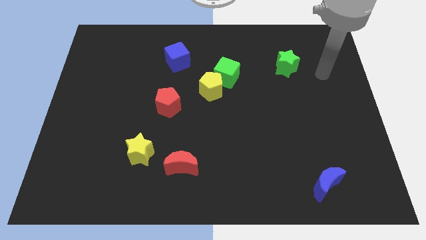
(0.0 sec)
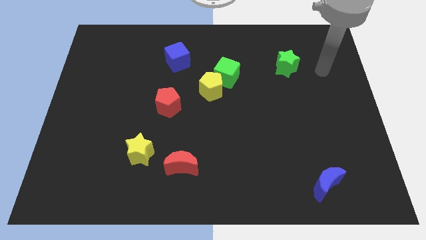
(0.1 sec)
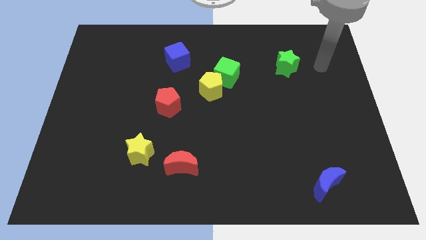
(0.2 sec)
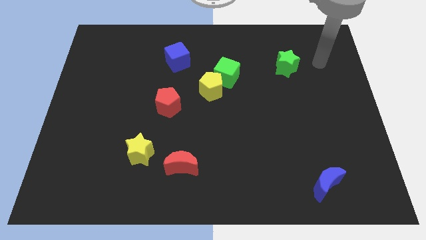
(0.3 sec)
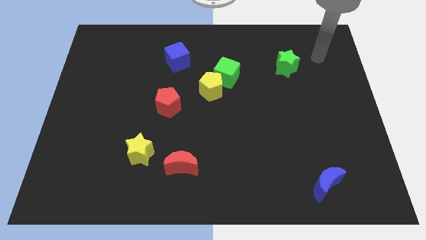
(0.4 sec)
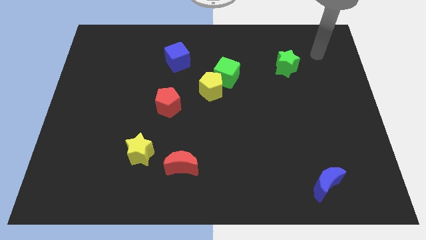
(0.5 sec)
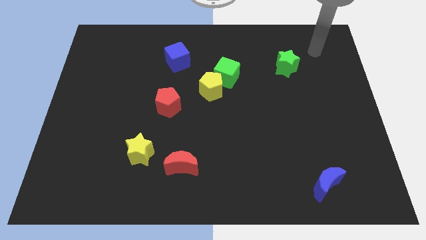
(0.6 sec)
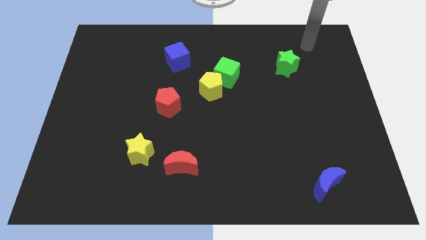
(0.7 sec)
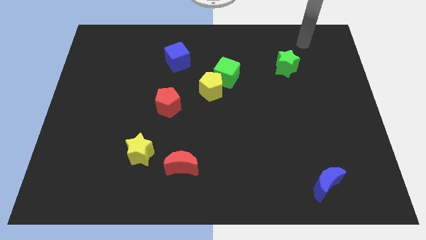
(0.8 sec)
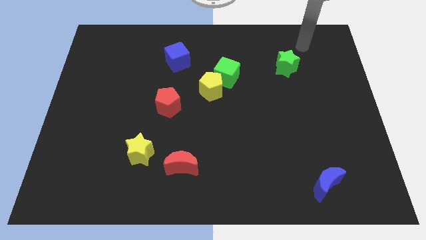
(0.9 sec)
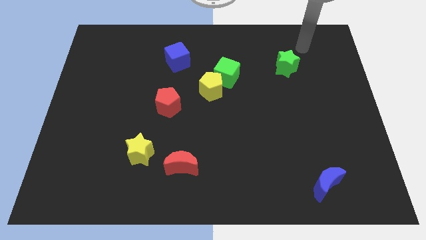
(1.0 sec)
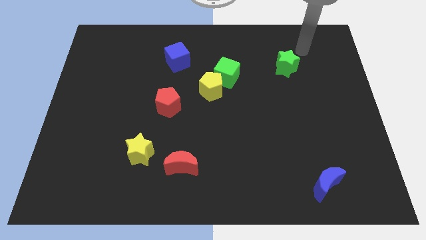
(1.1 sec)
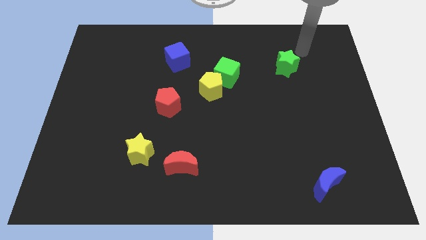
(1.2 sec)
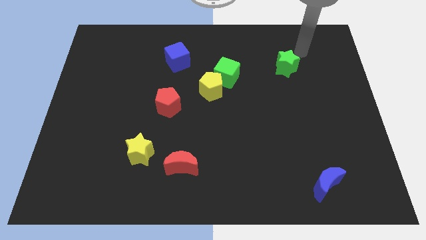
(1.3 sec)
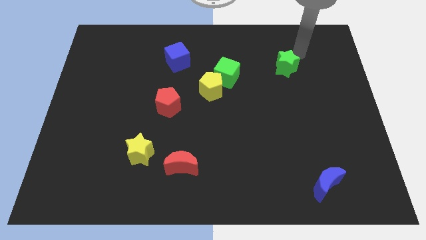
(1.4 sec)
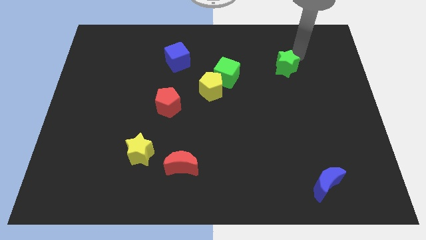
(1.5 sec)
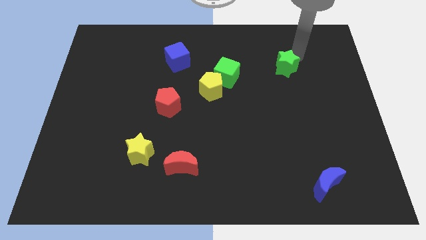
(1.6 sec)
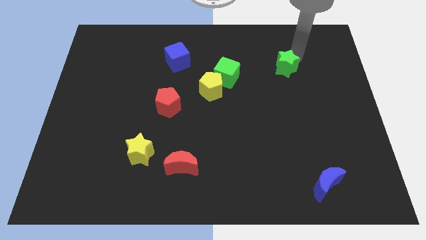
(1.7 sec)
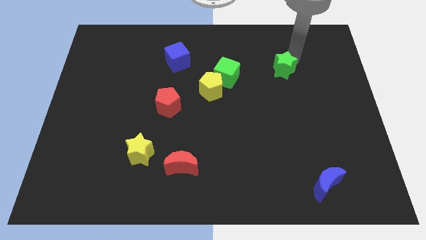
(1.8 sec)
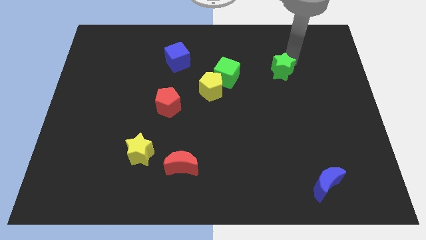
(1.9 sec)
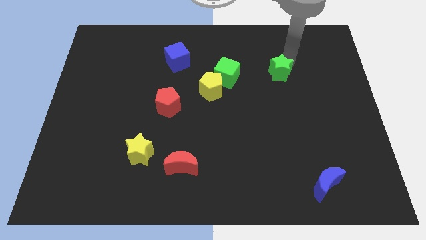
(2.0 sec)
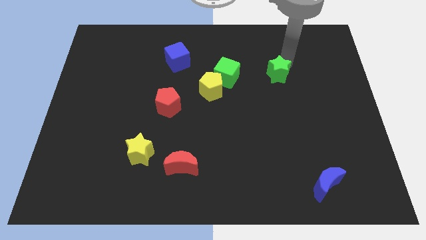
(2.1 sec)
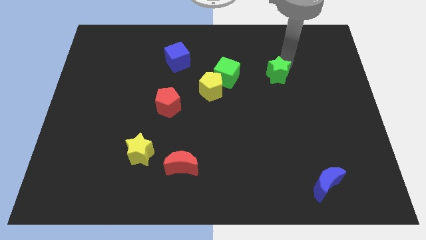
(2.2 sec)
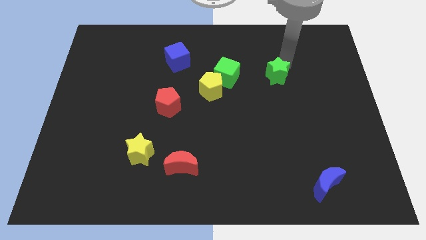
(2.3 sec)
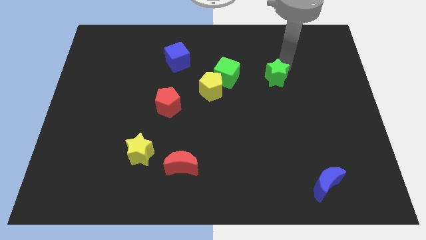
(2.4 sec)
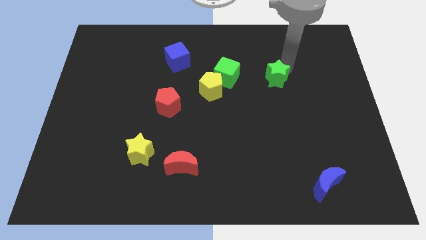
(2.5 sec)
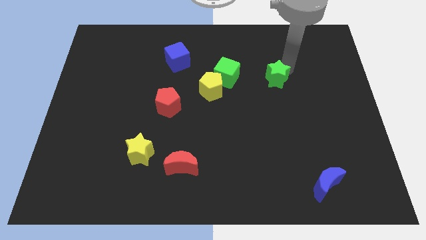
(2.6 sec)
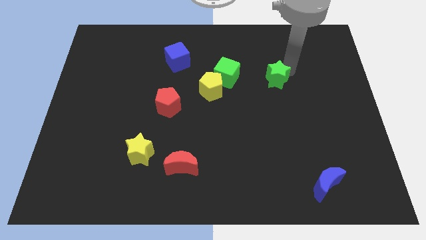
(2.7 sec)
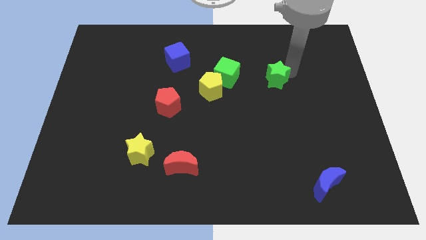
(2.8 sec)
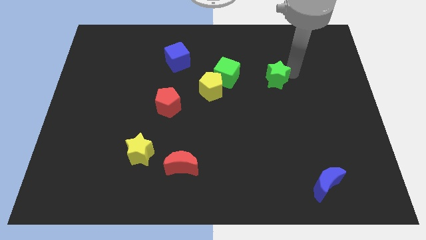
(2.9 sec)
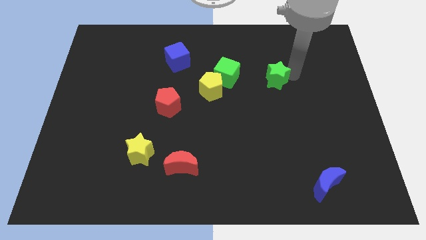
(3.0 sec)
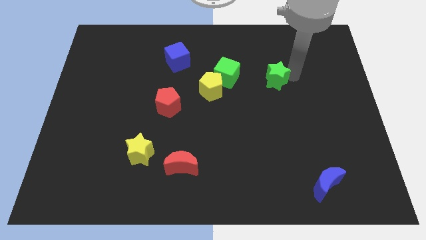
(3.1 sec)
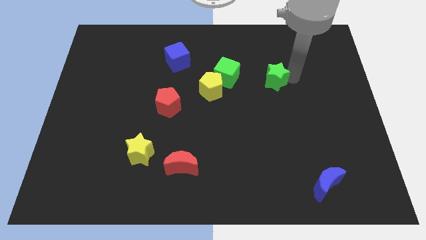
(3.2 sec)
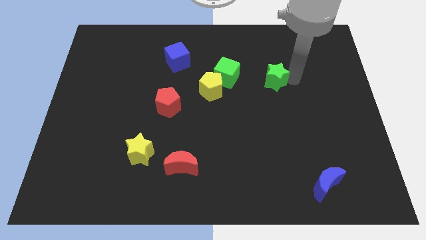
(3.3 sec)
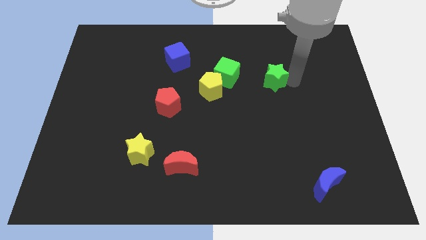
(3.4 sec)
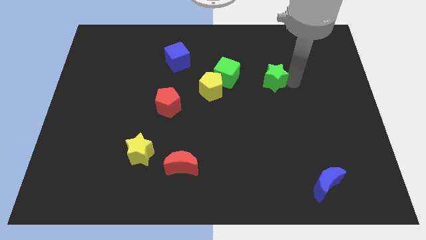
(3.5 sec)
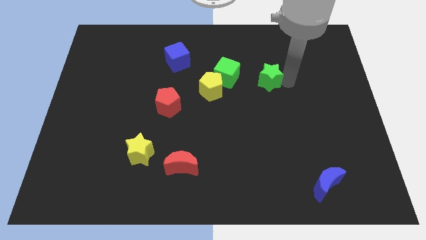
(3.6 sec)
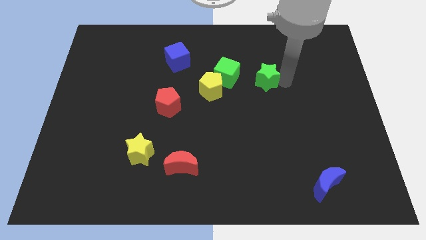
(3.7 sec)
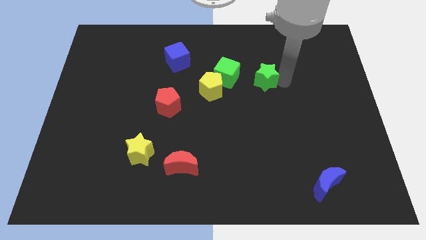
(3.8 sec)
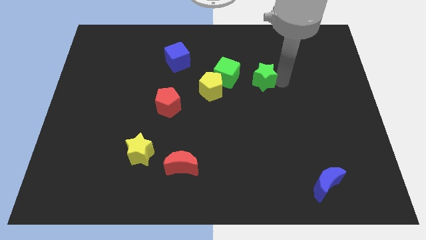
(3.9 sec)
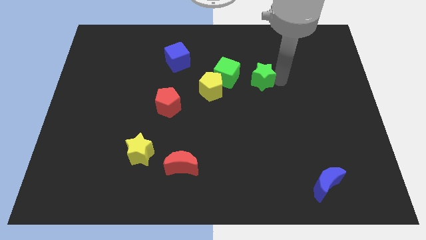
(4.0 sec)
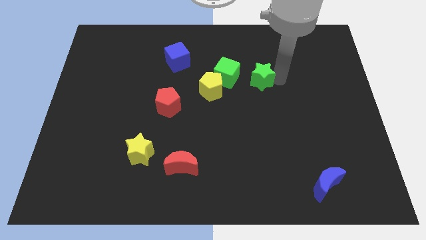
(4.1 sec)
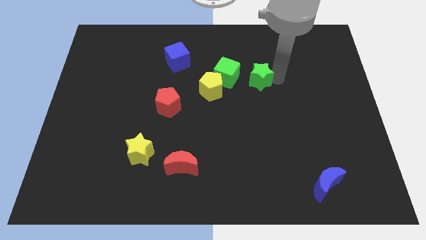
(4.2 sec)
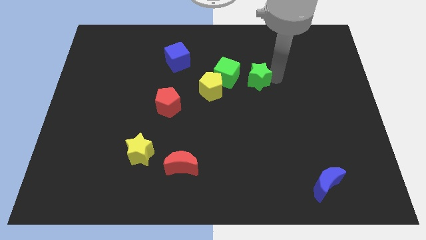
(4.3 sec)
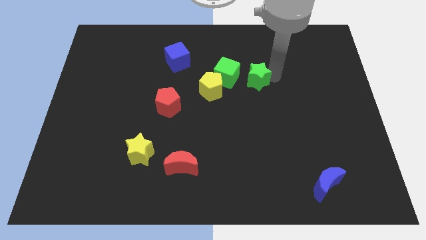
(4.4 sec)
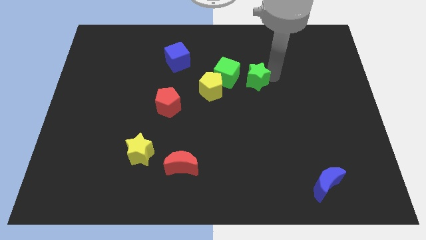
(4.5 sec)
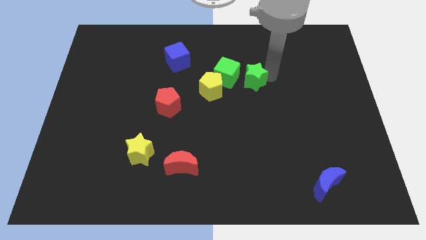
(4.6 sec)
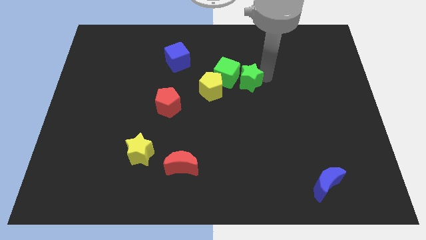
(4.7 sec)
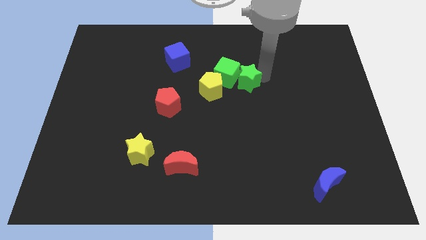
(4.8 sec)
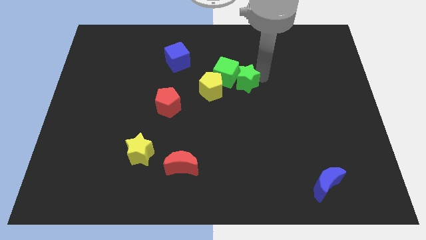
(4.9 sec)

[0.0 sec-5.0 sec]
push the green star to the right of the green cube

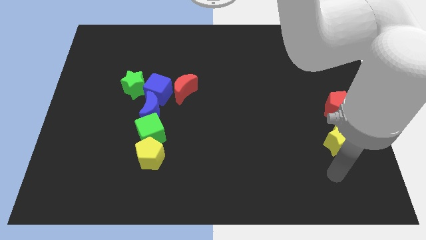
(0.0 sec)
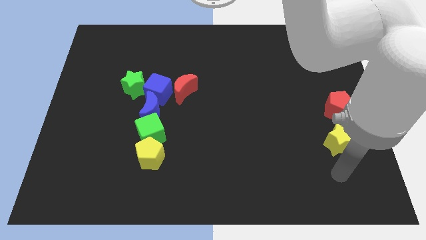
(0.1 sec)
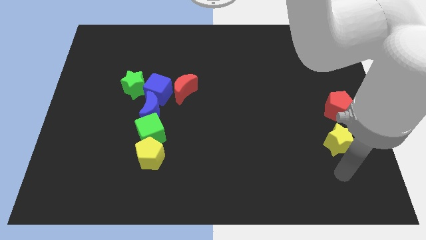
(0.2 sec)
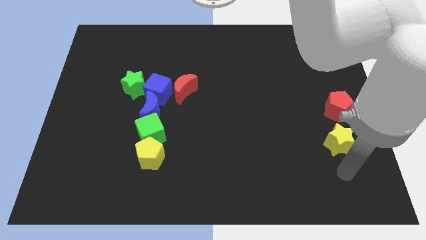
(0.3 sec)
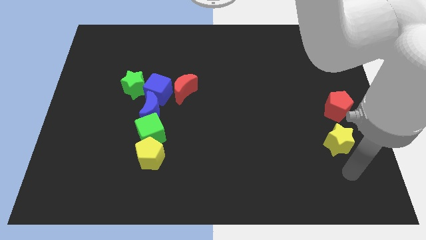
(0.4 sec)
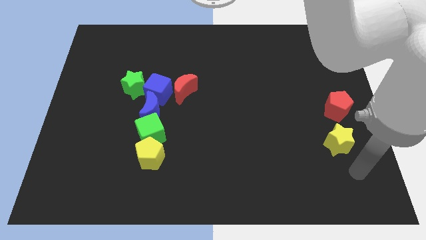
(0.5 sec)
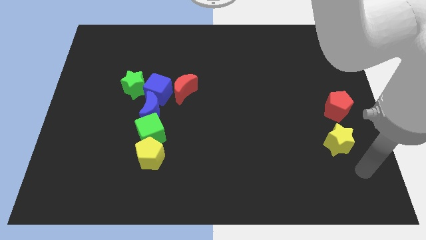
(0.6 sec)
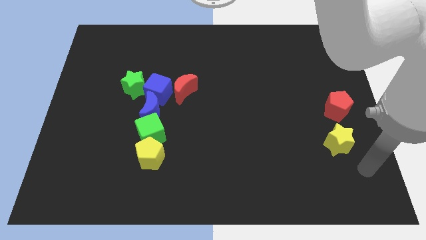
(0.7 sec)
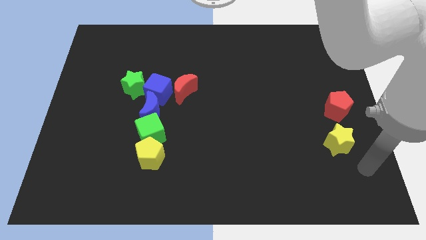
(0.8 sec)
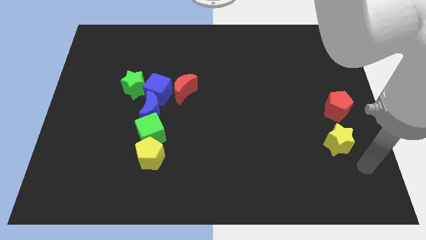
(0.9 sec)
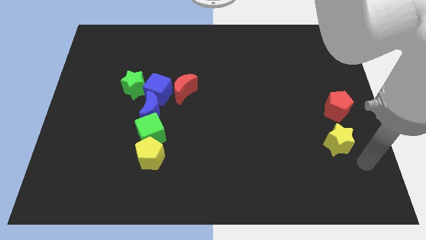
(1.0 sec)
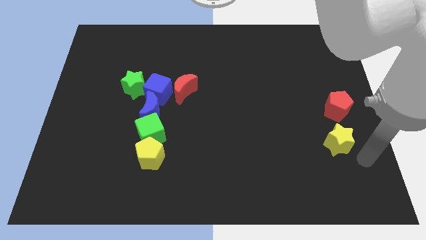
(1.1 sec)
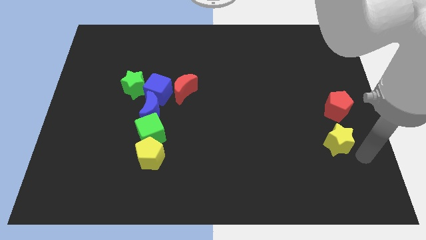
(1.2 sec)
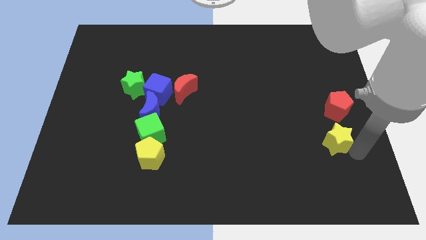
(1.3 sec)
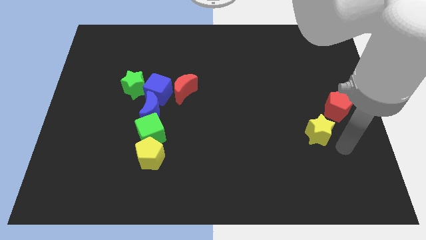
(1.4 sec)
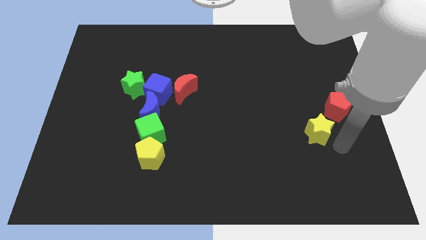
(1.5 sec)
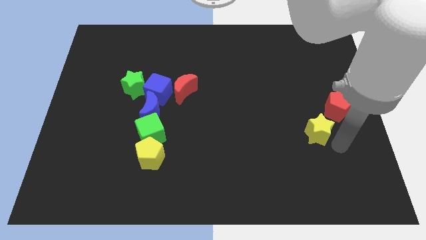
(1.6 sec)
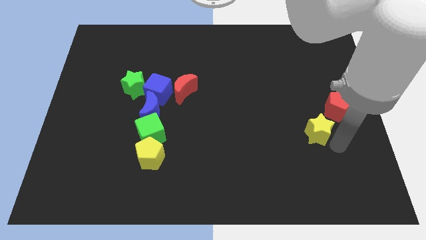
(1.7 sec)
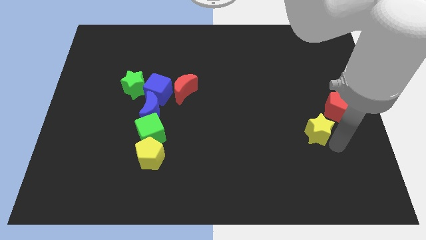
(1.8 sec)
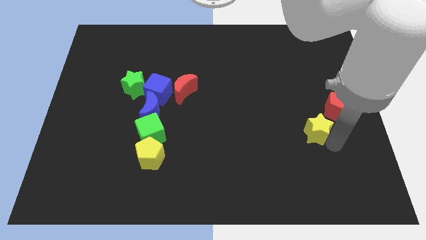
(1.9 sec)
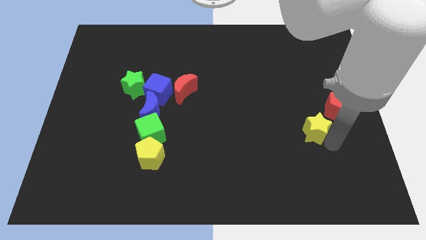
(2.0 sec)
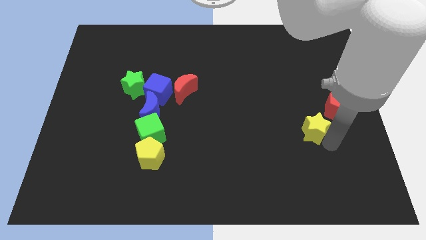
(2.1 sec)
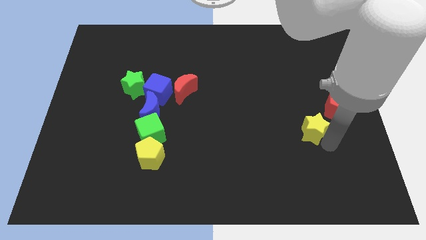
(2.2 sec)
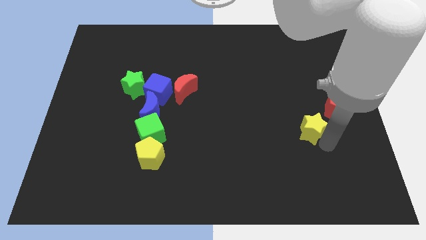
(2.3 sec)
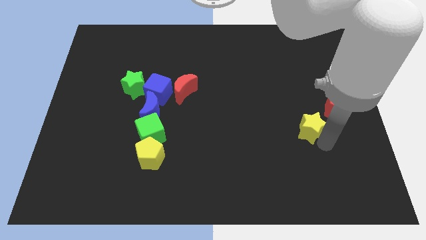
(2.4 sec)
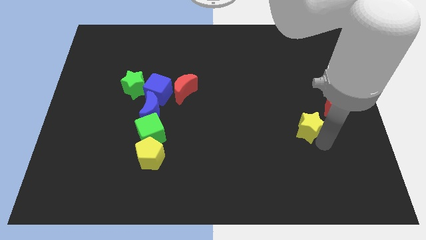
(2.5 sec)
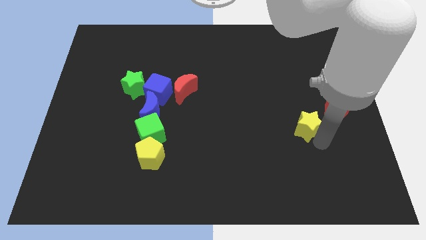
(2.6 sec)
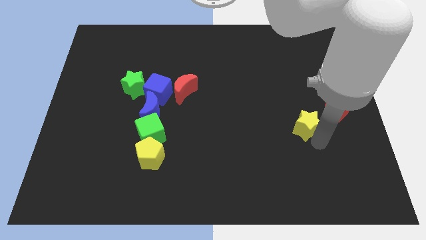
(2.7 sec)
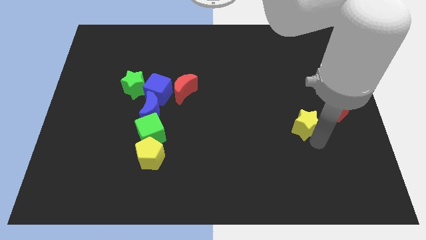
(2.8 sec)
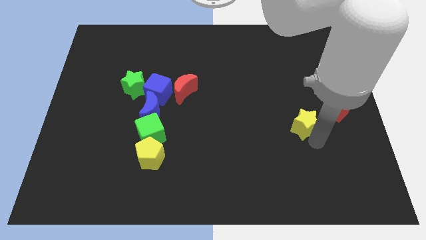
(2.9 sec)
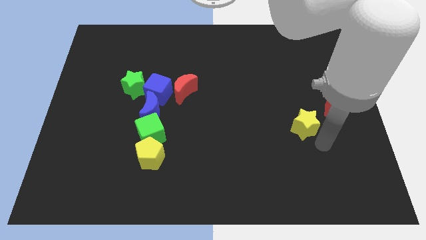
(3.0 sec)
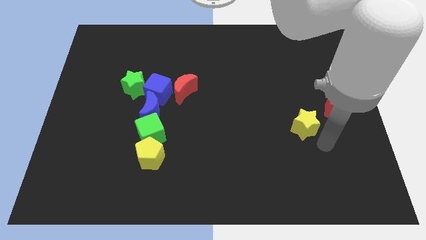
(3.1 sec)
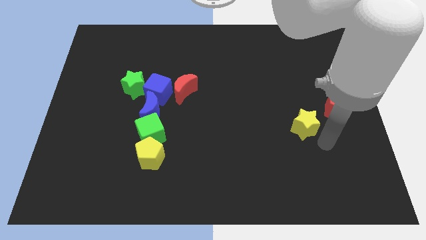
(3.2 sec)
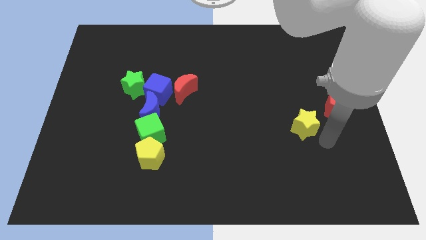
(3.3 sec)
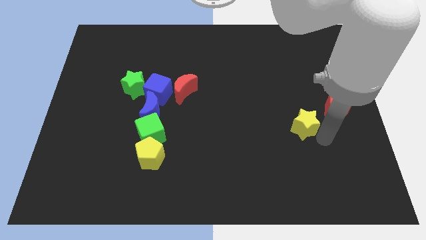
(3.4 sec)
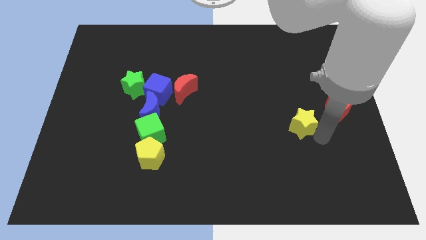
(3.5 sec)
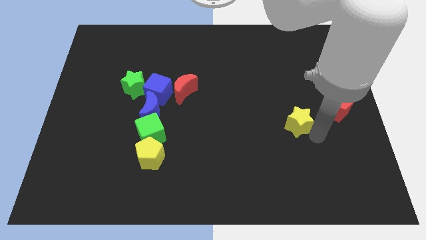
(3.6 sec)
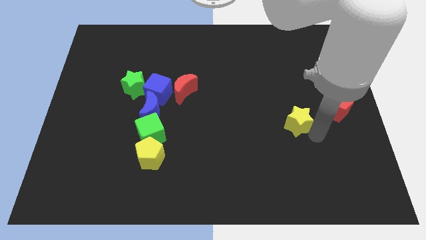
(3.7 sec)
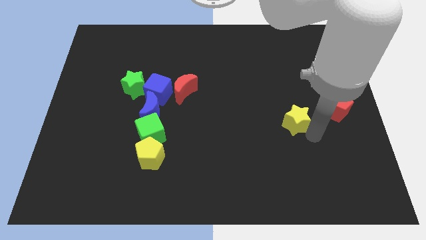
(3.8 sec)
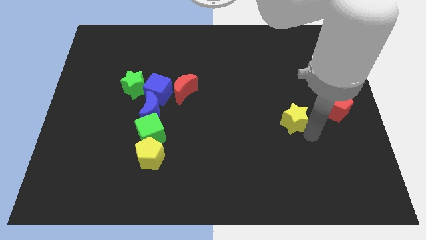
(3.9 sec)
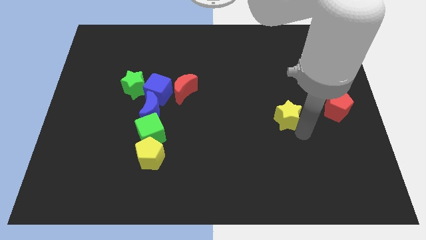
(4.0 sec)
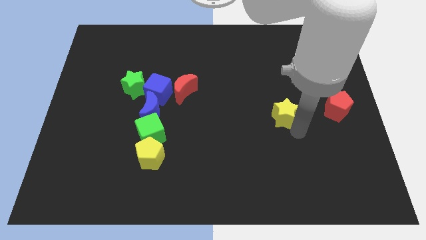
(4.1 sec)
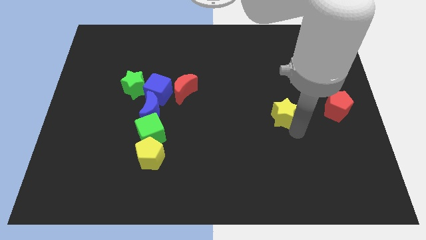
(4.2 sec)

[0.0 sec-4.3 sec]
move yellow star away from the red pentagon
